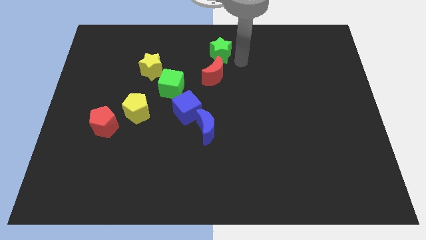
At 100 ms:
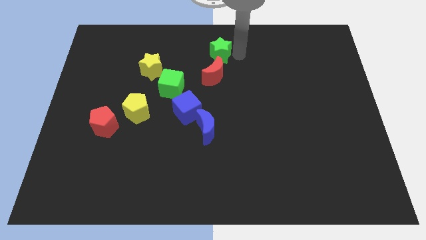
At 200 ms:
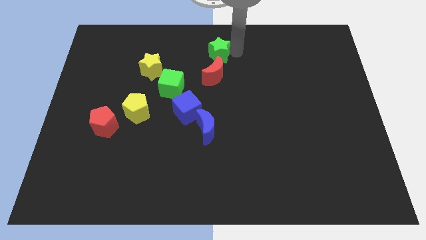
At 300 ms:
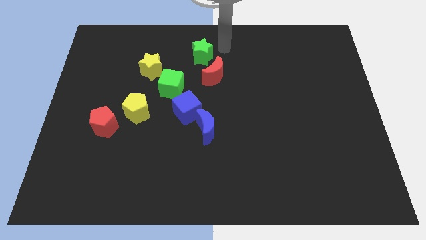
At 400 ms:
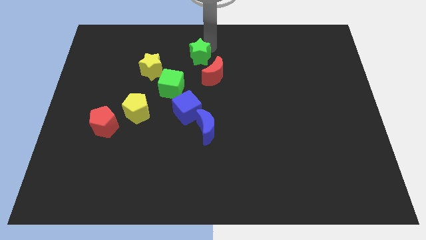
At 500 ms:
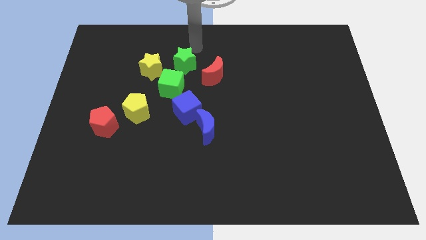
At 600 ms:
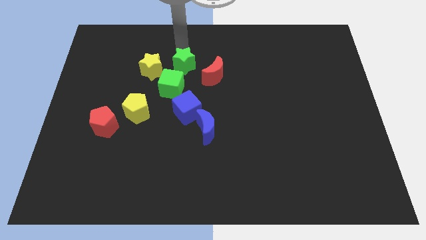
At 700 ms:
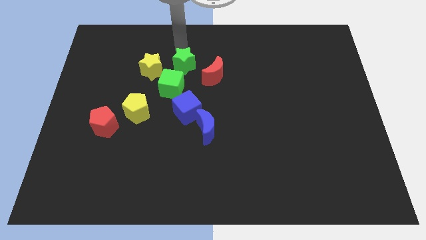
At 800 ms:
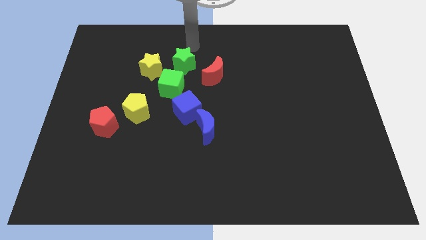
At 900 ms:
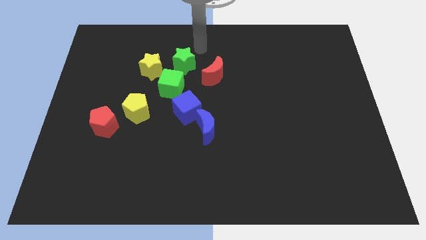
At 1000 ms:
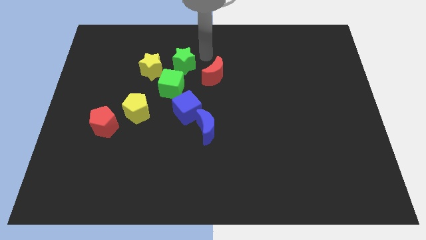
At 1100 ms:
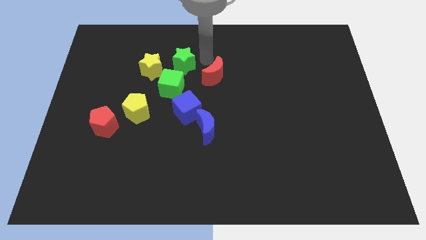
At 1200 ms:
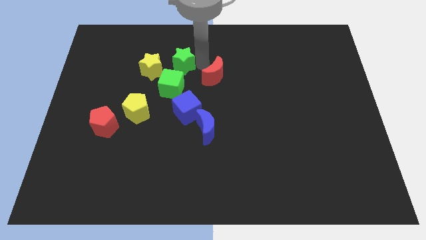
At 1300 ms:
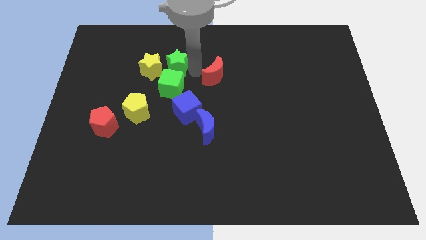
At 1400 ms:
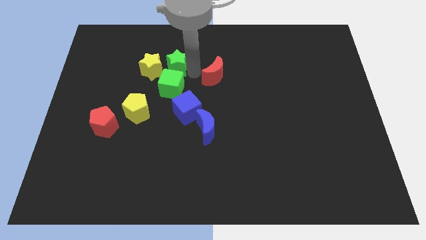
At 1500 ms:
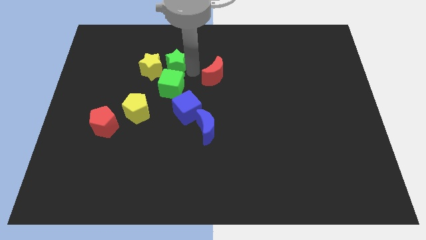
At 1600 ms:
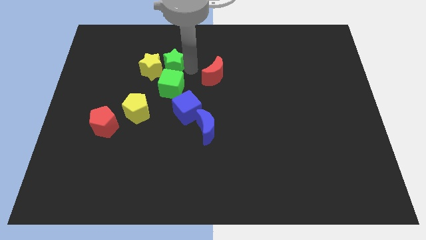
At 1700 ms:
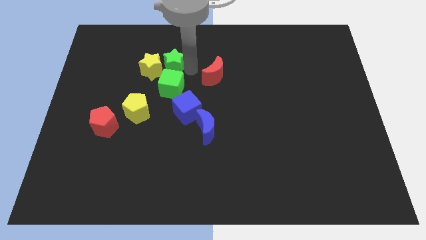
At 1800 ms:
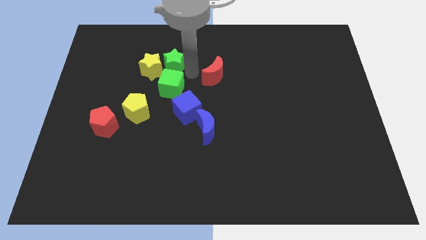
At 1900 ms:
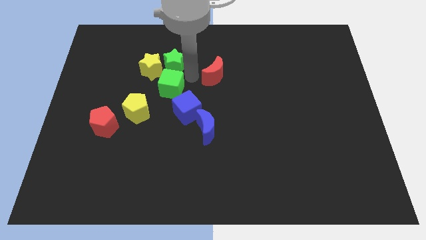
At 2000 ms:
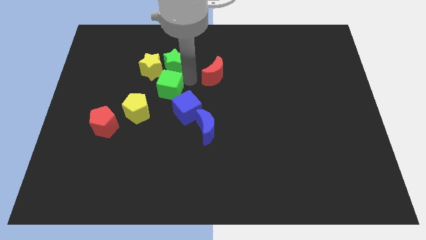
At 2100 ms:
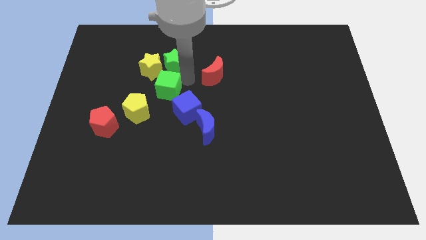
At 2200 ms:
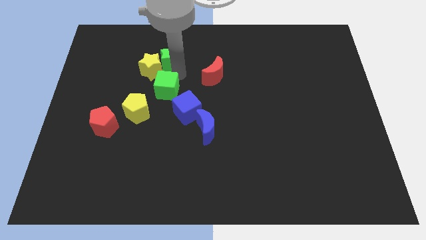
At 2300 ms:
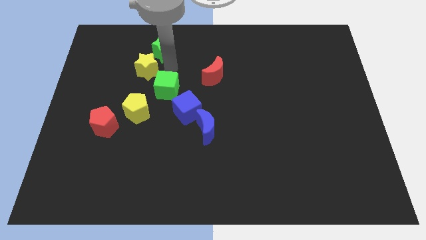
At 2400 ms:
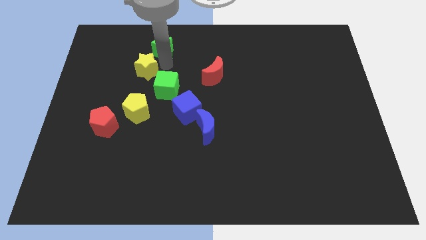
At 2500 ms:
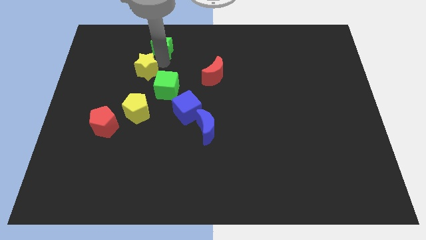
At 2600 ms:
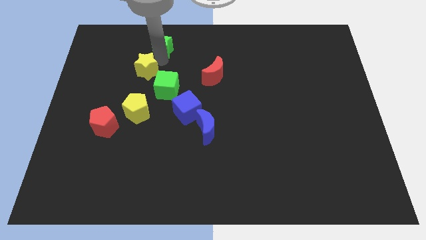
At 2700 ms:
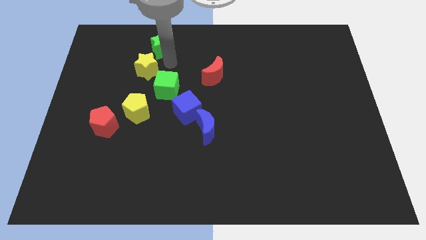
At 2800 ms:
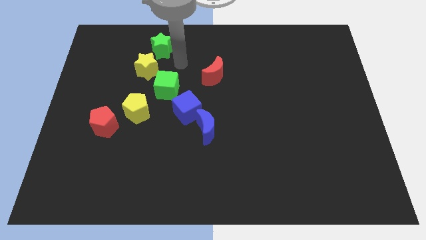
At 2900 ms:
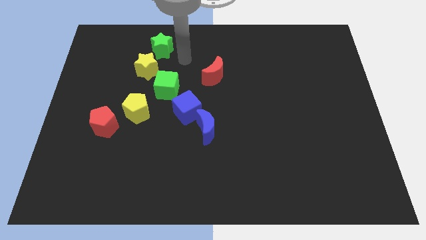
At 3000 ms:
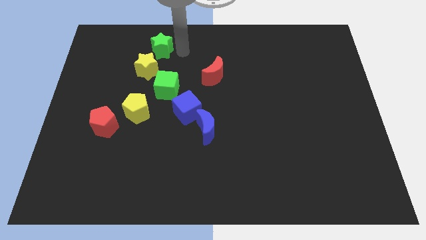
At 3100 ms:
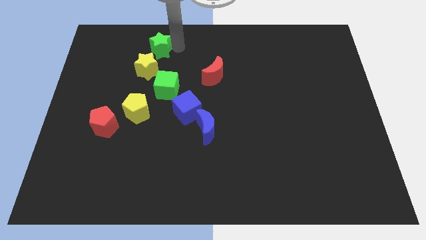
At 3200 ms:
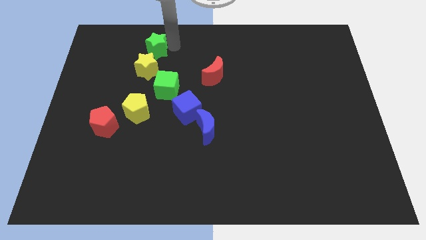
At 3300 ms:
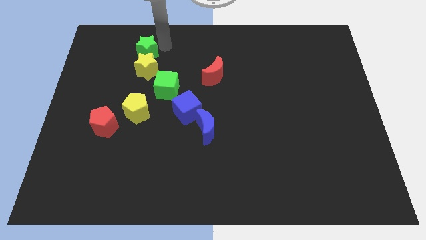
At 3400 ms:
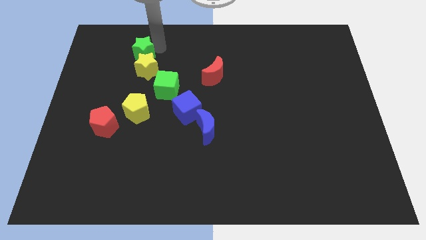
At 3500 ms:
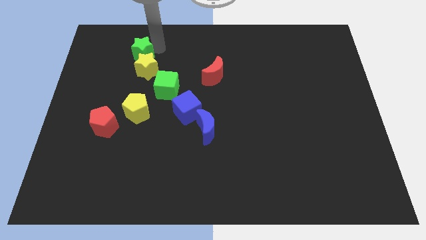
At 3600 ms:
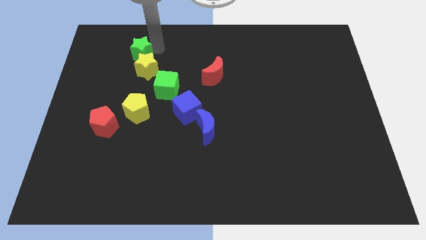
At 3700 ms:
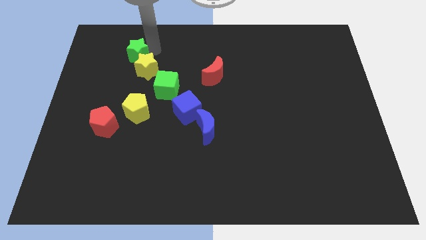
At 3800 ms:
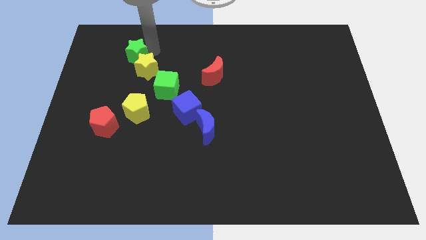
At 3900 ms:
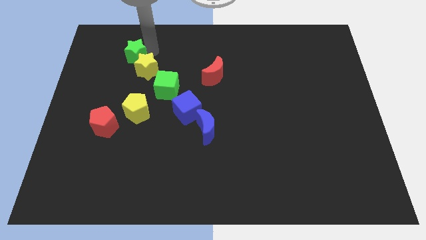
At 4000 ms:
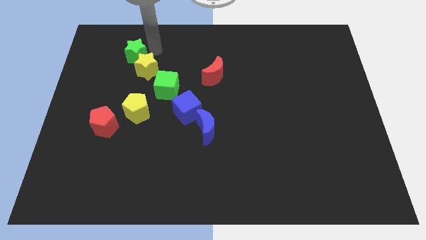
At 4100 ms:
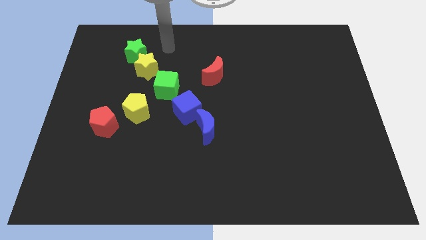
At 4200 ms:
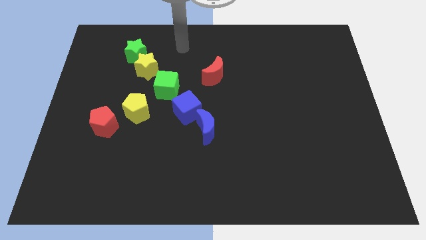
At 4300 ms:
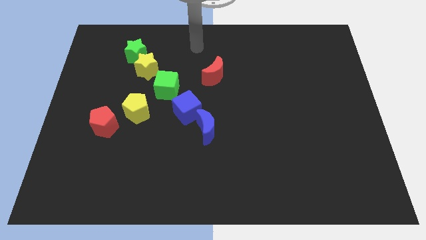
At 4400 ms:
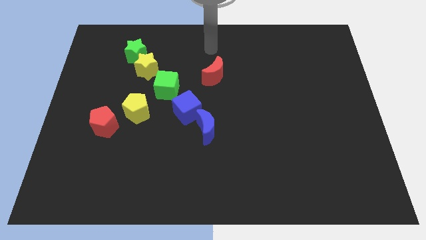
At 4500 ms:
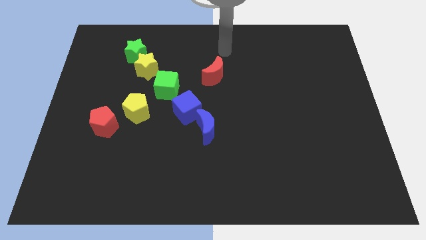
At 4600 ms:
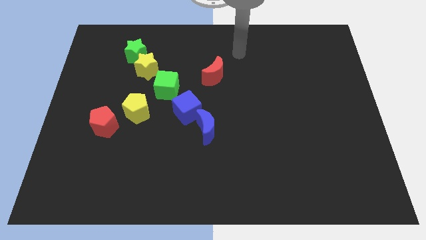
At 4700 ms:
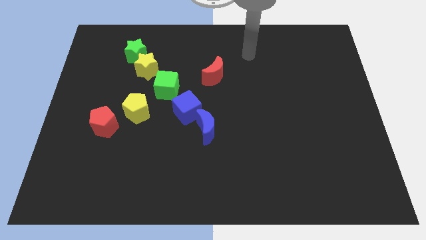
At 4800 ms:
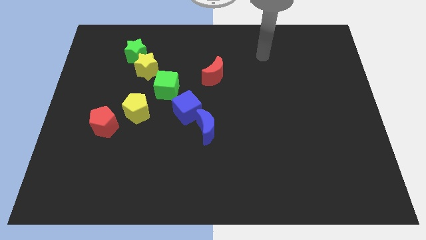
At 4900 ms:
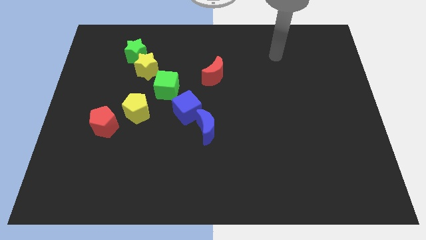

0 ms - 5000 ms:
move the green star to the top of yellow star

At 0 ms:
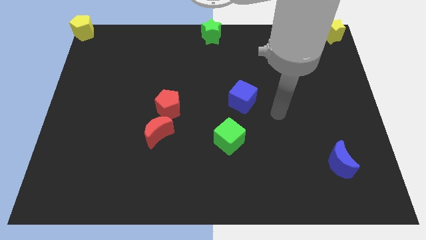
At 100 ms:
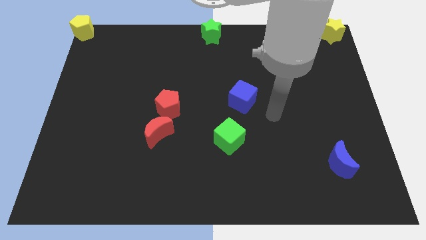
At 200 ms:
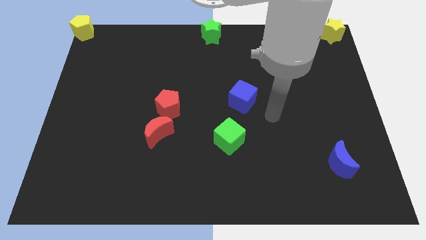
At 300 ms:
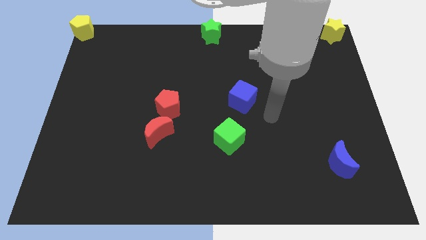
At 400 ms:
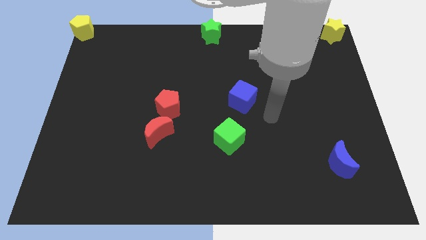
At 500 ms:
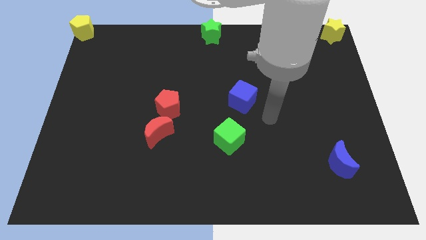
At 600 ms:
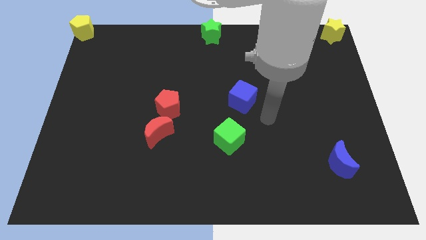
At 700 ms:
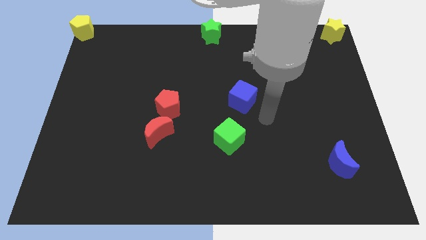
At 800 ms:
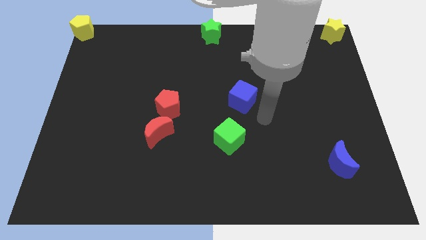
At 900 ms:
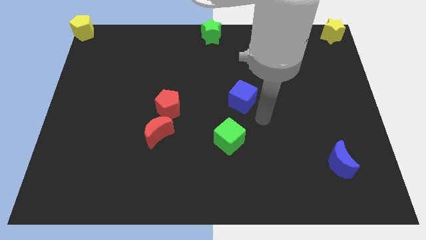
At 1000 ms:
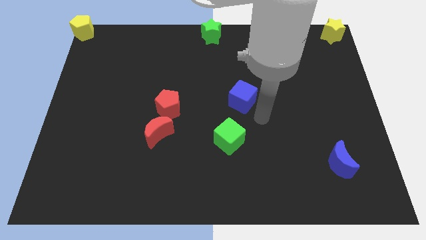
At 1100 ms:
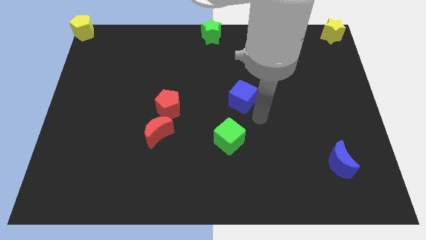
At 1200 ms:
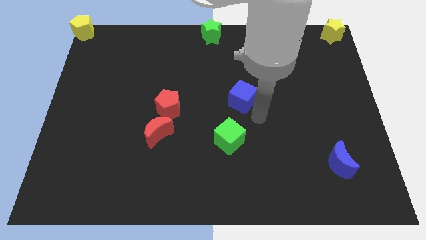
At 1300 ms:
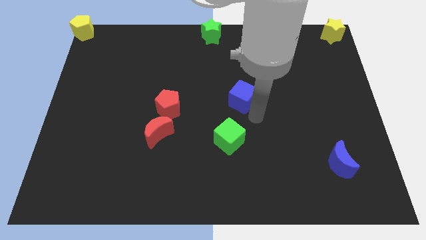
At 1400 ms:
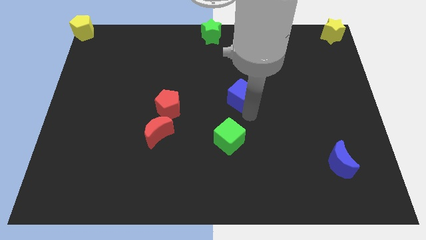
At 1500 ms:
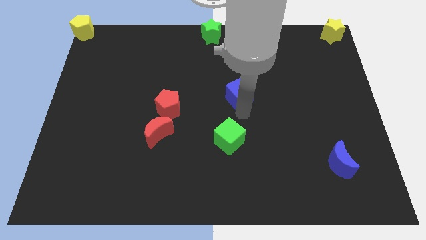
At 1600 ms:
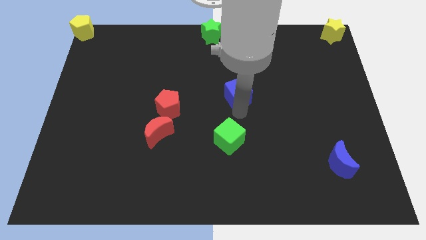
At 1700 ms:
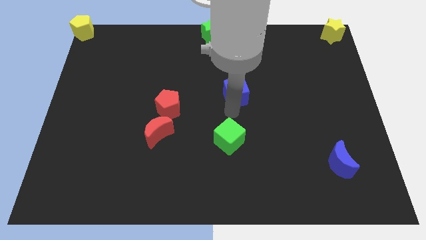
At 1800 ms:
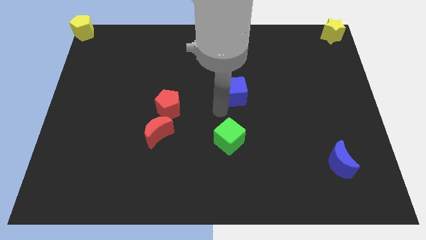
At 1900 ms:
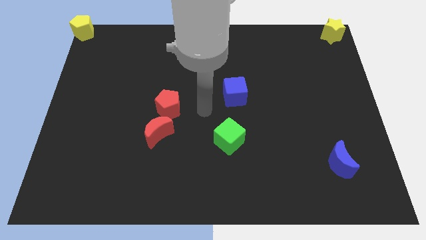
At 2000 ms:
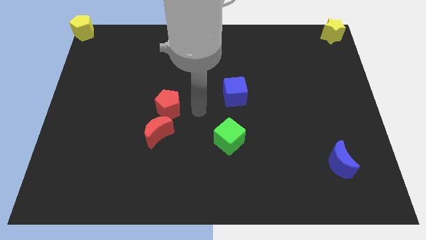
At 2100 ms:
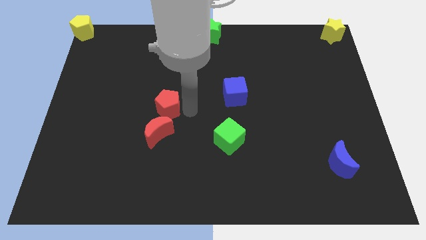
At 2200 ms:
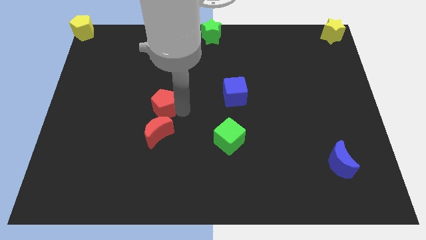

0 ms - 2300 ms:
slightly push the blue cube towards the top side of the board

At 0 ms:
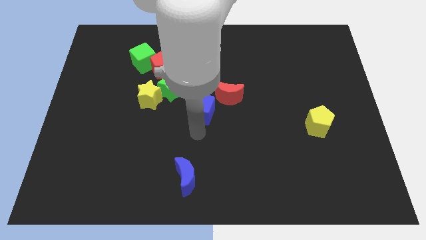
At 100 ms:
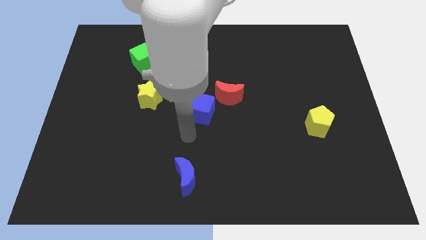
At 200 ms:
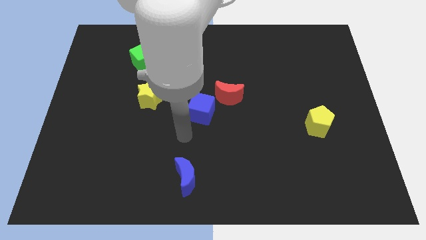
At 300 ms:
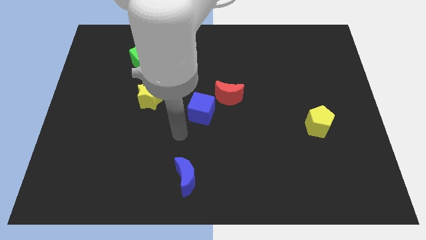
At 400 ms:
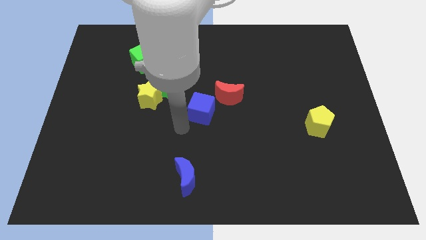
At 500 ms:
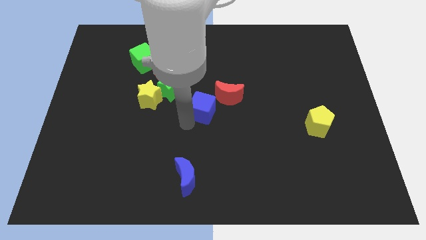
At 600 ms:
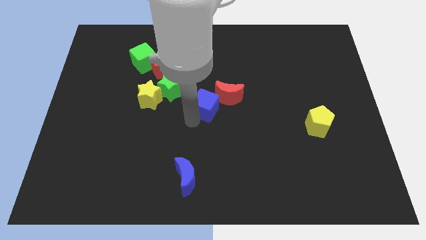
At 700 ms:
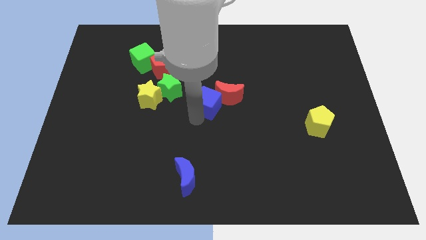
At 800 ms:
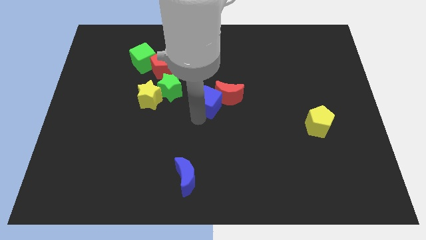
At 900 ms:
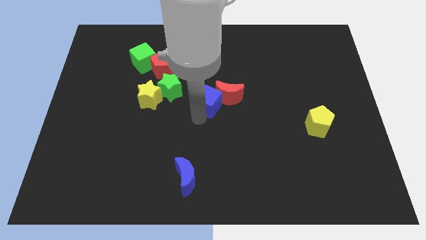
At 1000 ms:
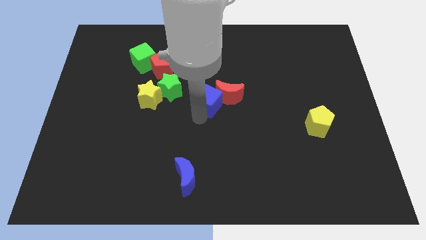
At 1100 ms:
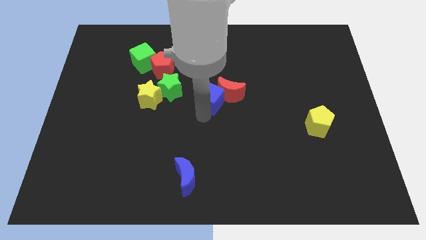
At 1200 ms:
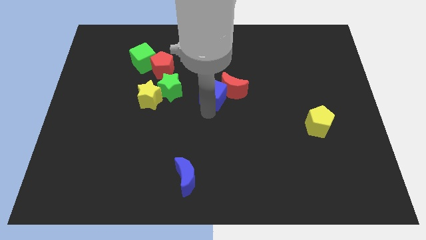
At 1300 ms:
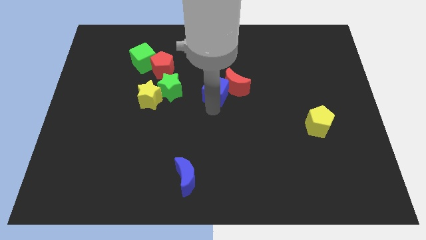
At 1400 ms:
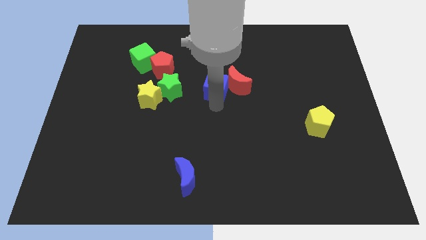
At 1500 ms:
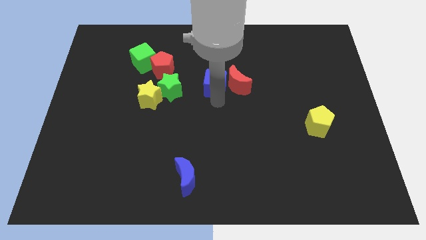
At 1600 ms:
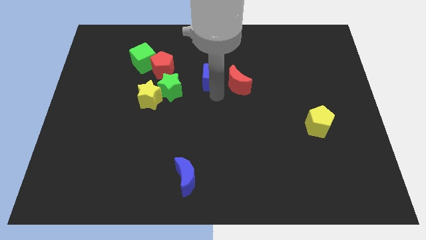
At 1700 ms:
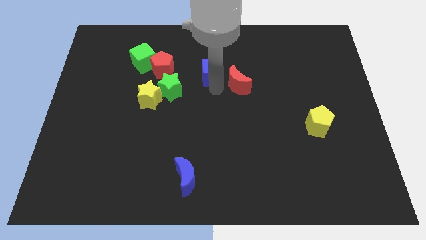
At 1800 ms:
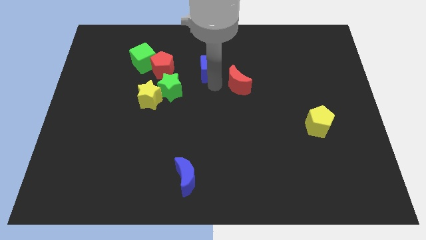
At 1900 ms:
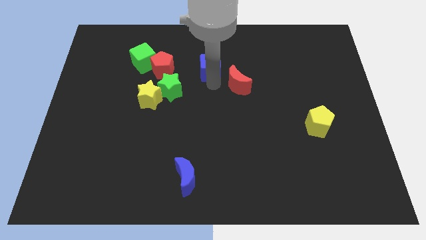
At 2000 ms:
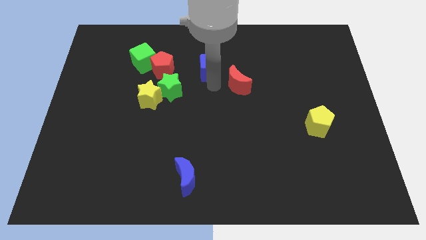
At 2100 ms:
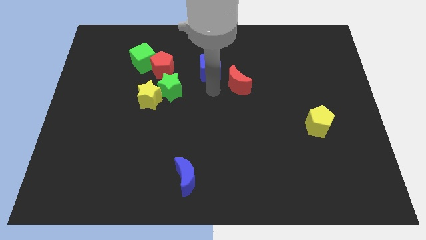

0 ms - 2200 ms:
move the blue cube into the red moon
